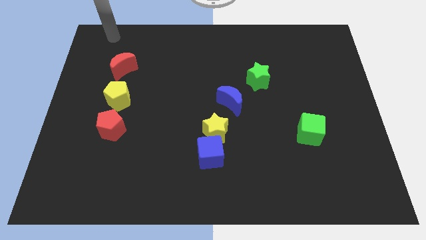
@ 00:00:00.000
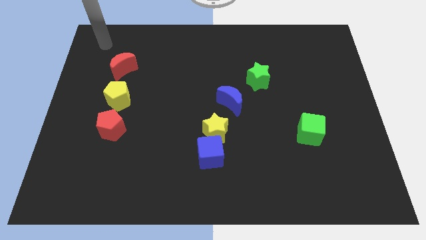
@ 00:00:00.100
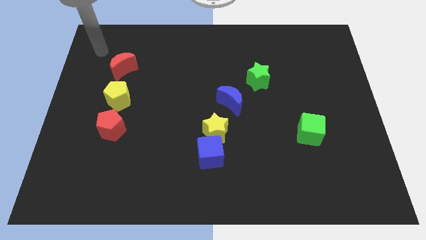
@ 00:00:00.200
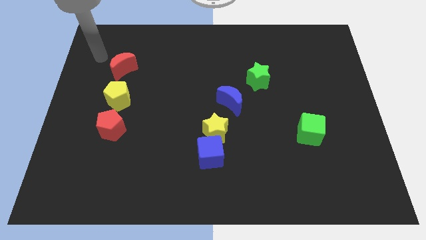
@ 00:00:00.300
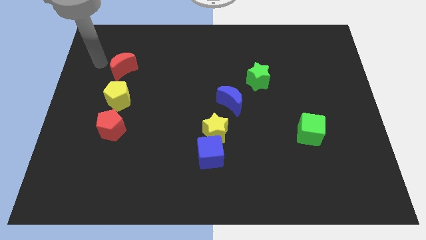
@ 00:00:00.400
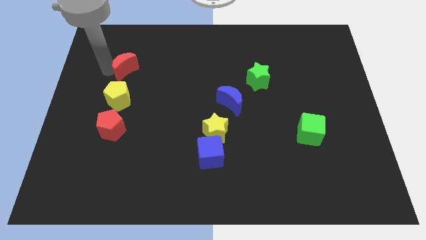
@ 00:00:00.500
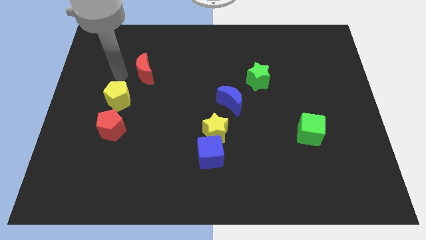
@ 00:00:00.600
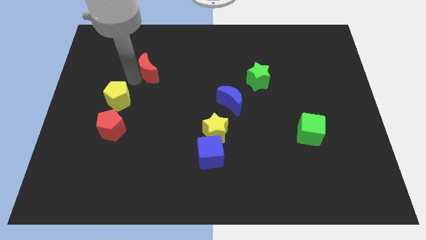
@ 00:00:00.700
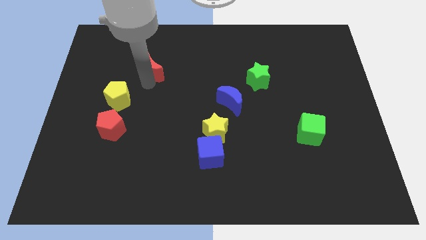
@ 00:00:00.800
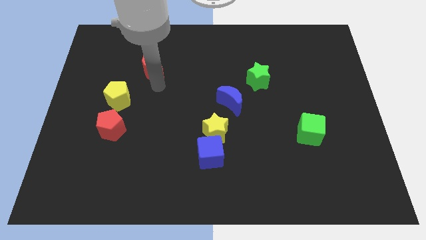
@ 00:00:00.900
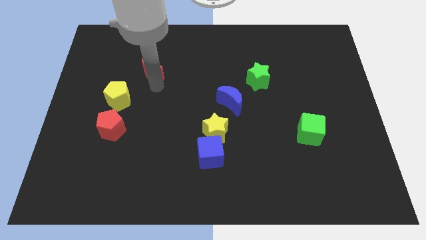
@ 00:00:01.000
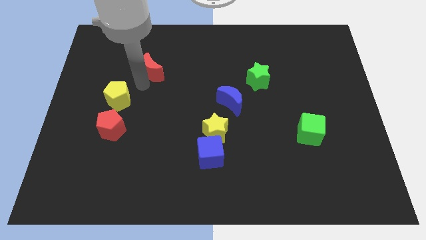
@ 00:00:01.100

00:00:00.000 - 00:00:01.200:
slightly push the red moon parallel left of the green star

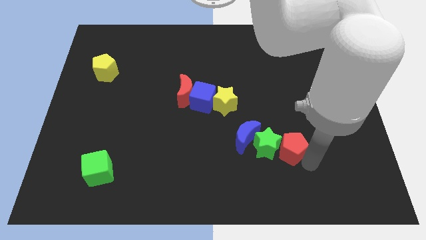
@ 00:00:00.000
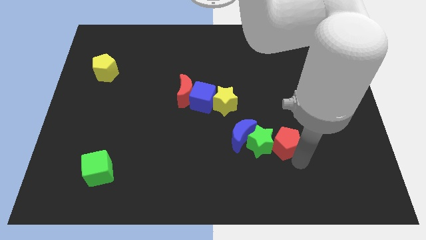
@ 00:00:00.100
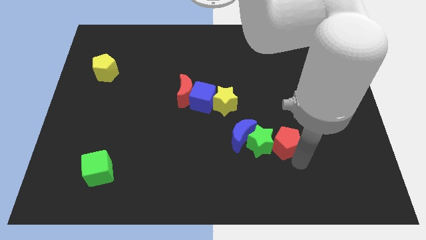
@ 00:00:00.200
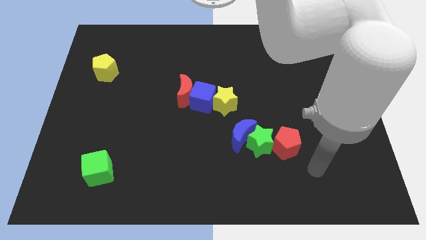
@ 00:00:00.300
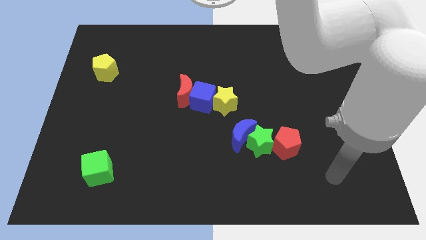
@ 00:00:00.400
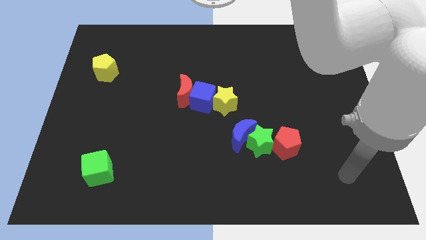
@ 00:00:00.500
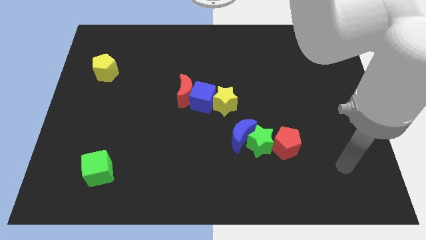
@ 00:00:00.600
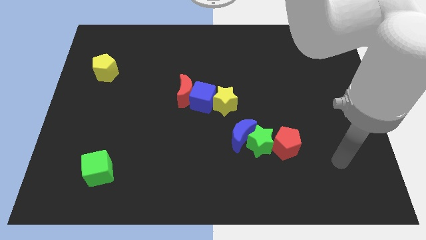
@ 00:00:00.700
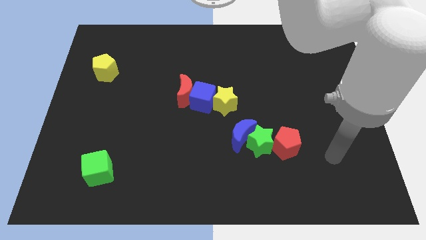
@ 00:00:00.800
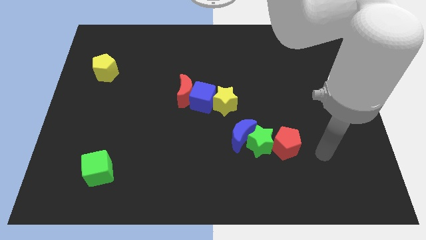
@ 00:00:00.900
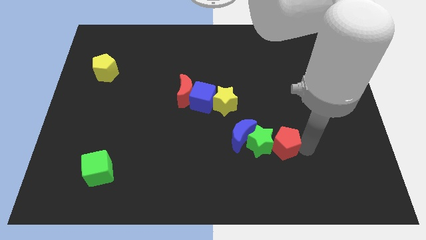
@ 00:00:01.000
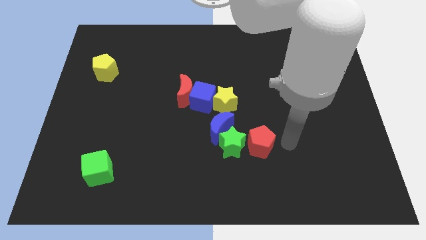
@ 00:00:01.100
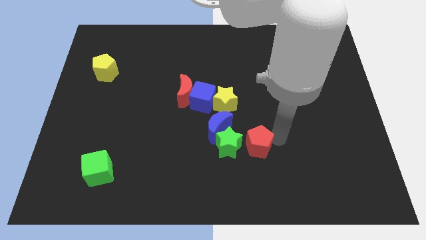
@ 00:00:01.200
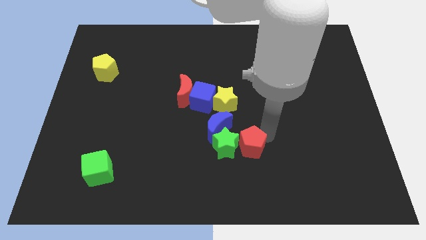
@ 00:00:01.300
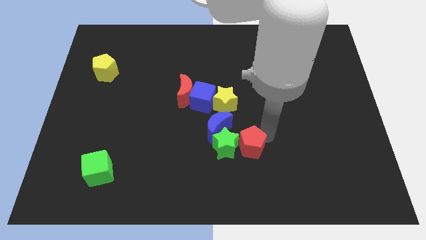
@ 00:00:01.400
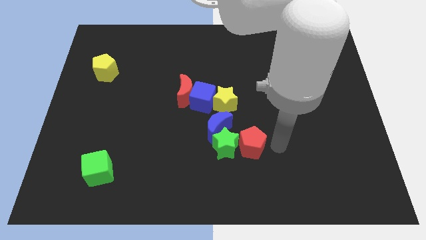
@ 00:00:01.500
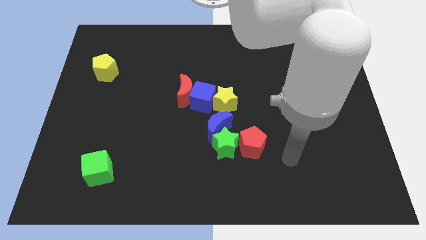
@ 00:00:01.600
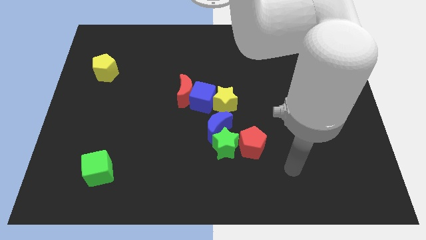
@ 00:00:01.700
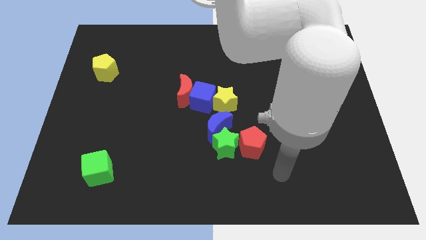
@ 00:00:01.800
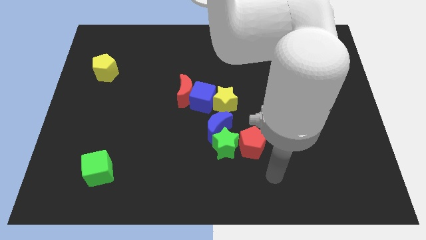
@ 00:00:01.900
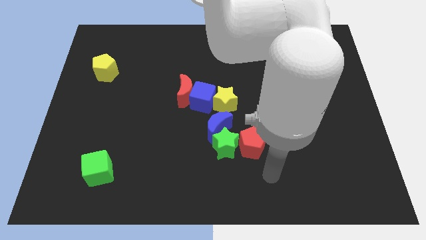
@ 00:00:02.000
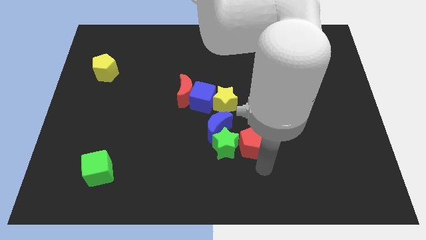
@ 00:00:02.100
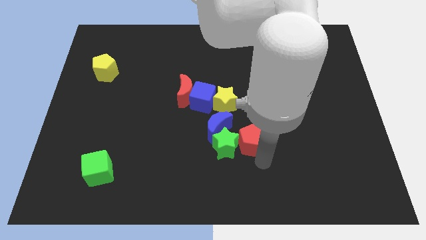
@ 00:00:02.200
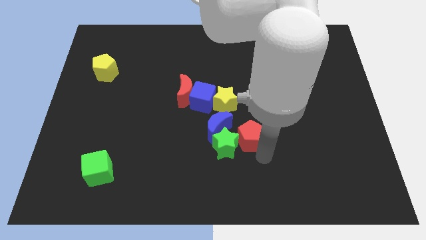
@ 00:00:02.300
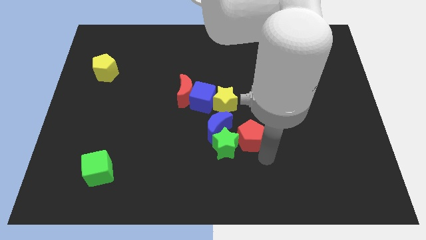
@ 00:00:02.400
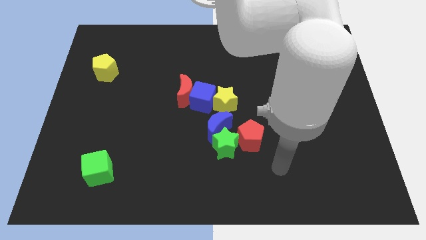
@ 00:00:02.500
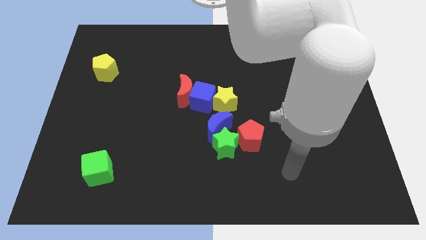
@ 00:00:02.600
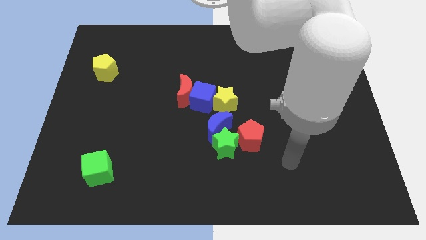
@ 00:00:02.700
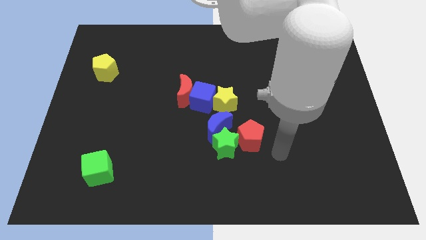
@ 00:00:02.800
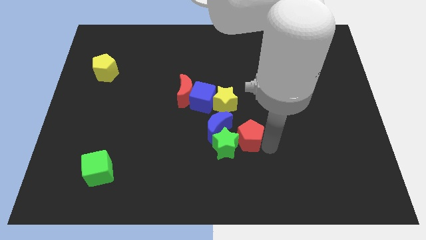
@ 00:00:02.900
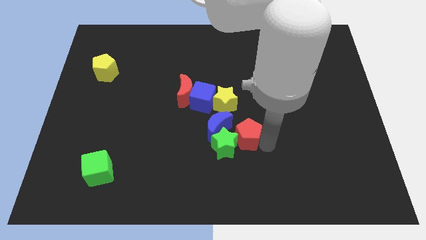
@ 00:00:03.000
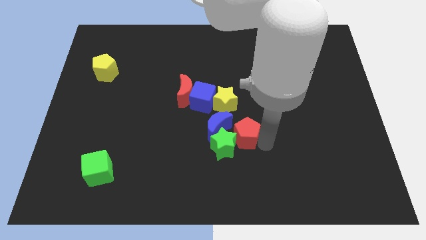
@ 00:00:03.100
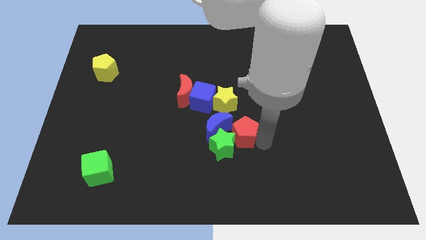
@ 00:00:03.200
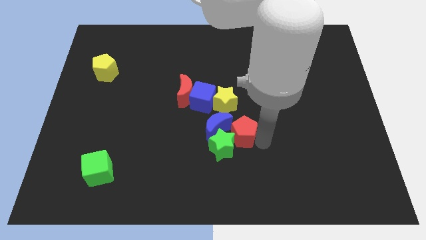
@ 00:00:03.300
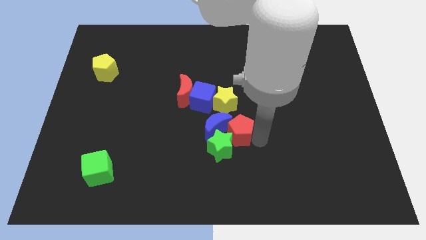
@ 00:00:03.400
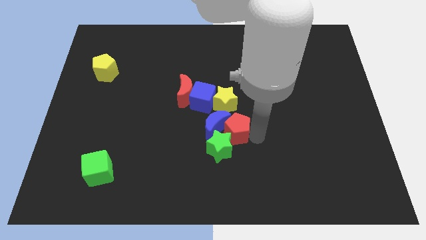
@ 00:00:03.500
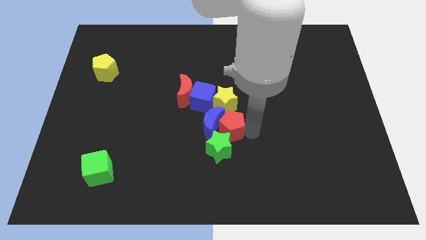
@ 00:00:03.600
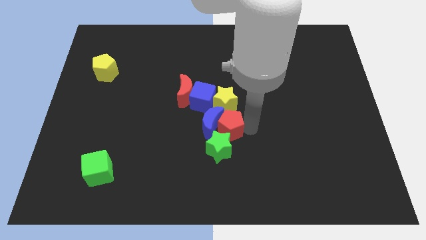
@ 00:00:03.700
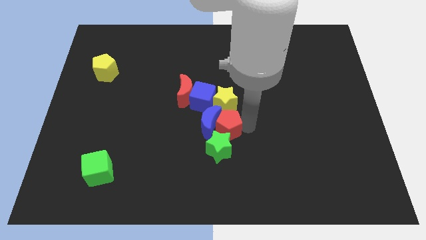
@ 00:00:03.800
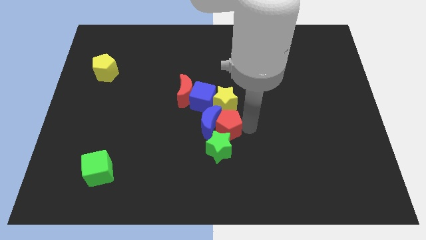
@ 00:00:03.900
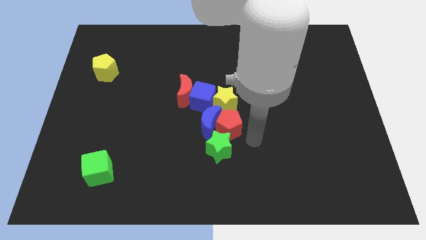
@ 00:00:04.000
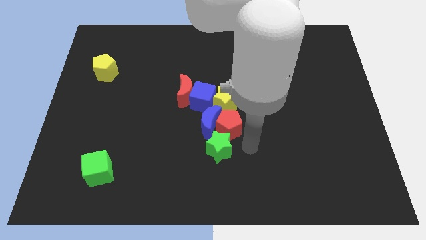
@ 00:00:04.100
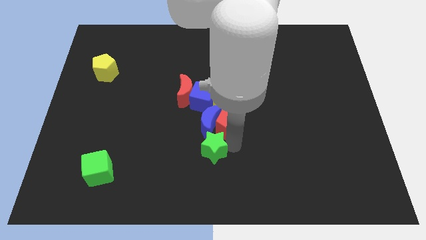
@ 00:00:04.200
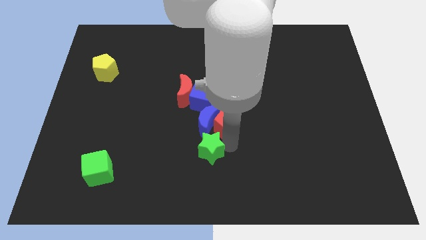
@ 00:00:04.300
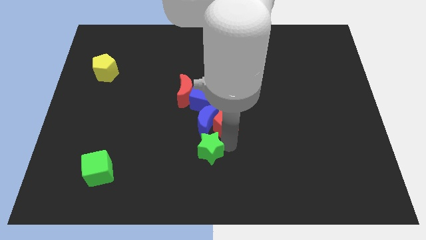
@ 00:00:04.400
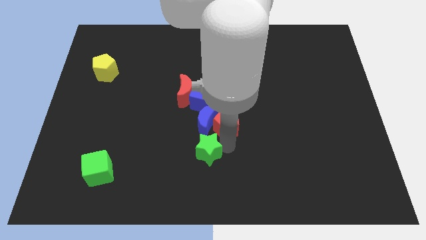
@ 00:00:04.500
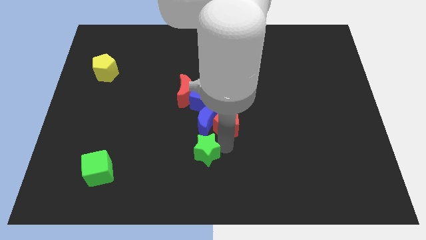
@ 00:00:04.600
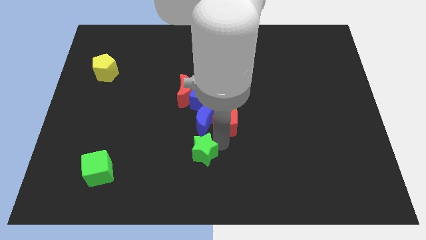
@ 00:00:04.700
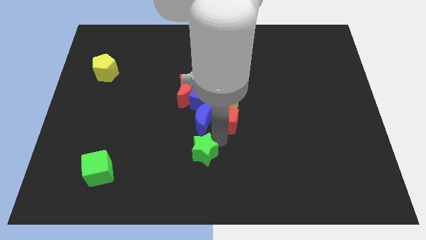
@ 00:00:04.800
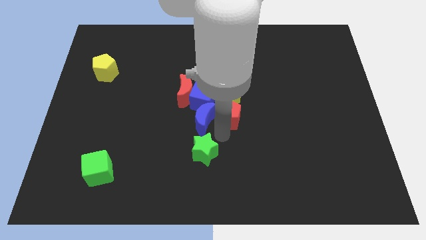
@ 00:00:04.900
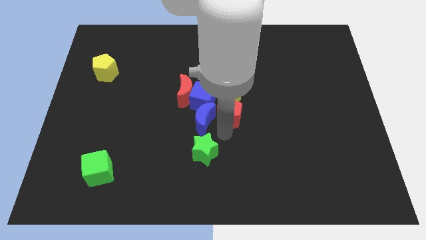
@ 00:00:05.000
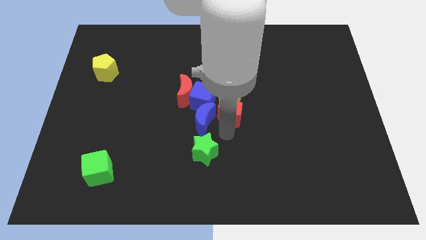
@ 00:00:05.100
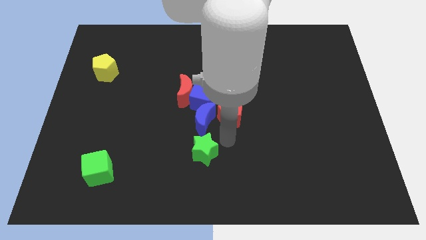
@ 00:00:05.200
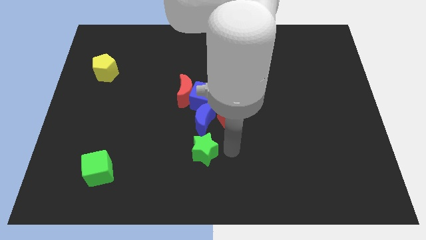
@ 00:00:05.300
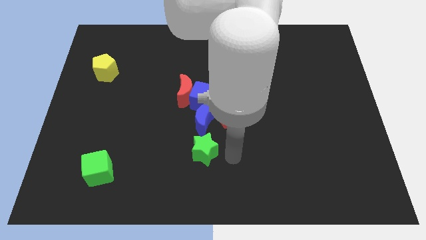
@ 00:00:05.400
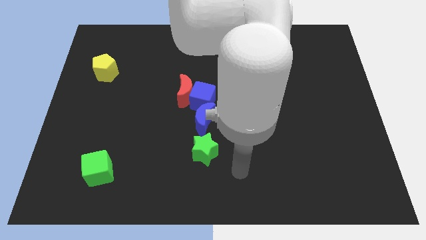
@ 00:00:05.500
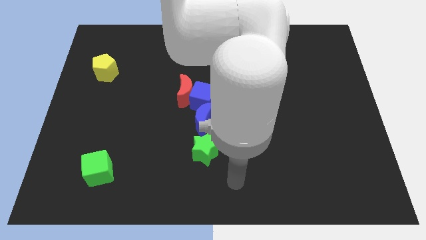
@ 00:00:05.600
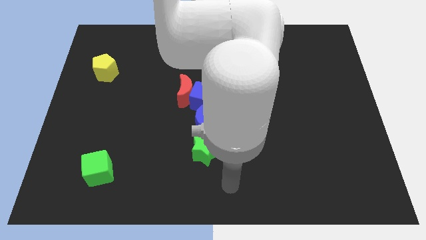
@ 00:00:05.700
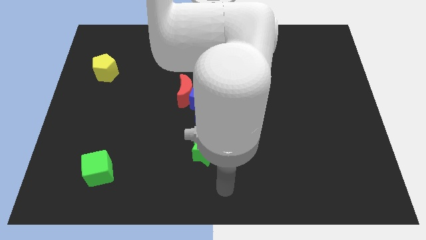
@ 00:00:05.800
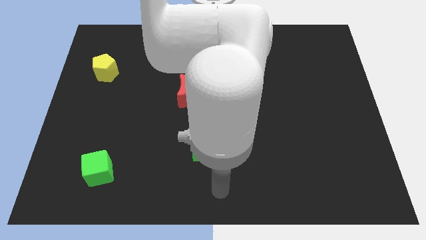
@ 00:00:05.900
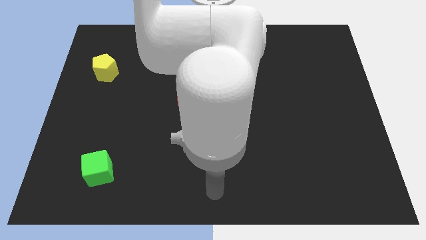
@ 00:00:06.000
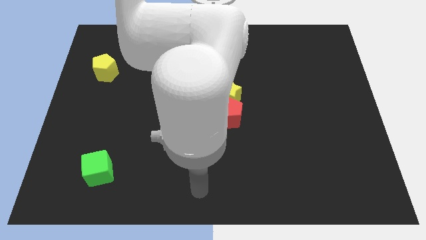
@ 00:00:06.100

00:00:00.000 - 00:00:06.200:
move the blue crescent below the yellow star

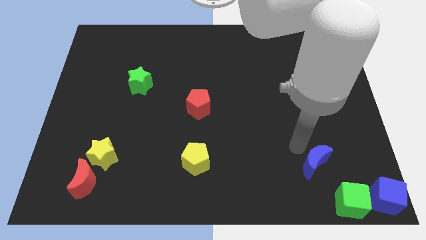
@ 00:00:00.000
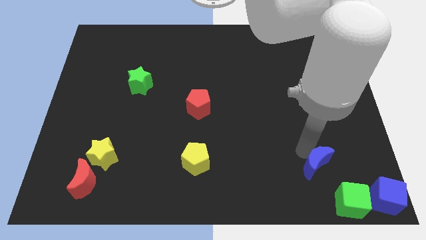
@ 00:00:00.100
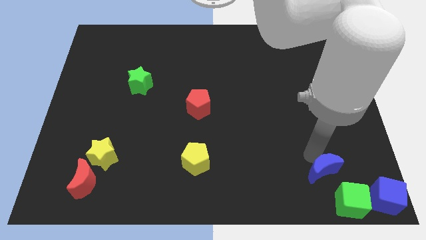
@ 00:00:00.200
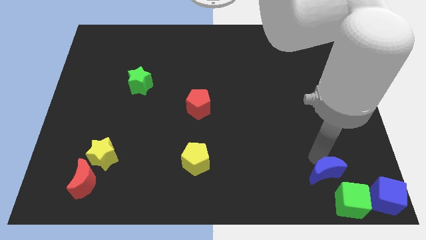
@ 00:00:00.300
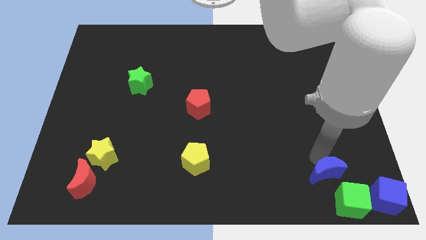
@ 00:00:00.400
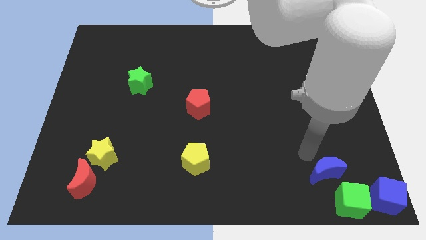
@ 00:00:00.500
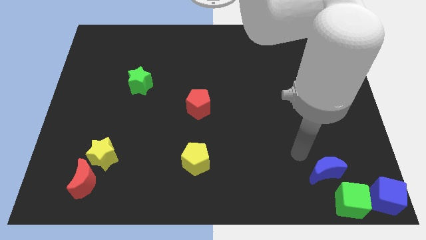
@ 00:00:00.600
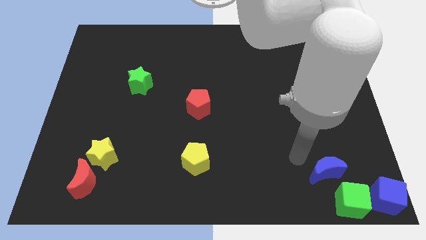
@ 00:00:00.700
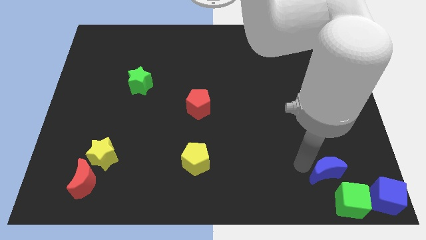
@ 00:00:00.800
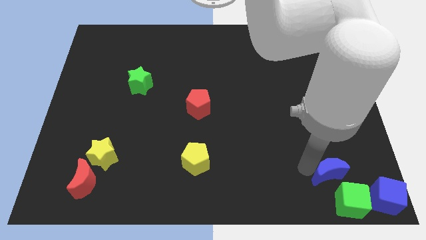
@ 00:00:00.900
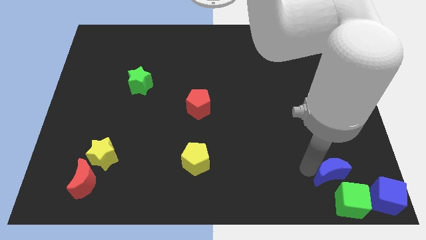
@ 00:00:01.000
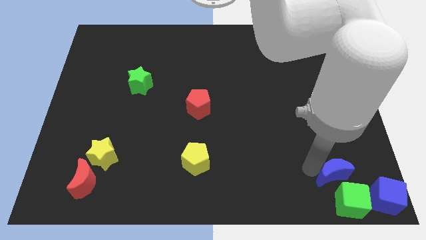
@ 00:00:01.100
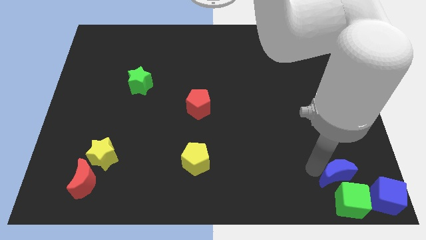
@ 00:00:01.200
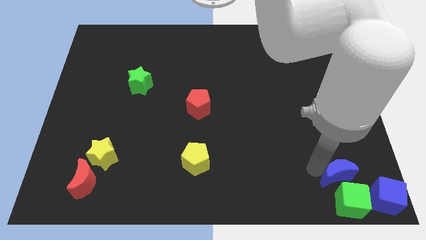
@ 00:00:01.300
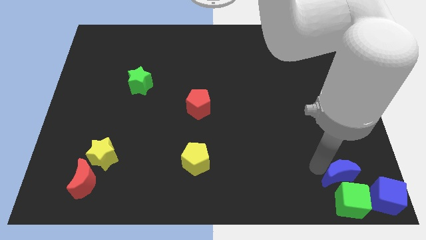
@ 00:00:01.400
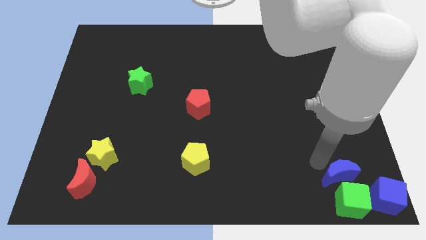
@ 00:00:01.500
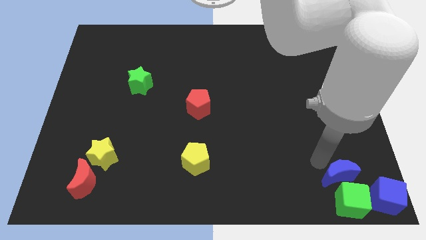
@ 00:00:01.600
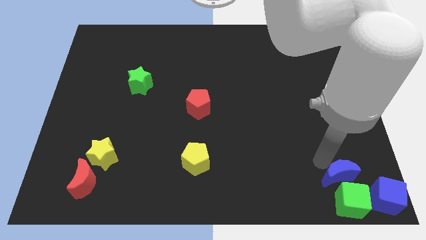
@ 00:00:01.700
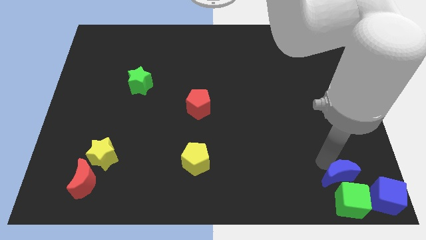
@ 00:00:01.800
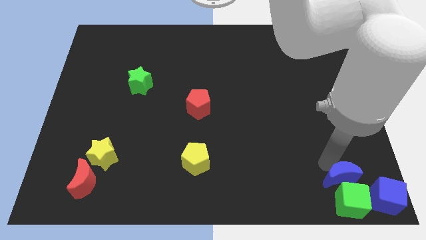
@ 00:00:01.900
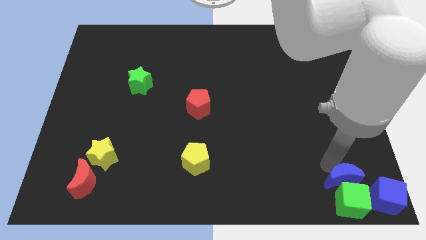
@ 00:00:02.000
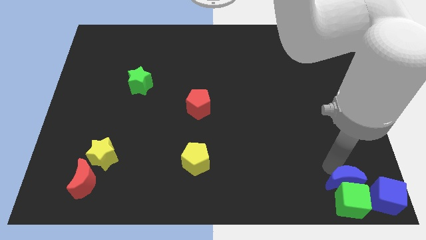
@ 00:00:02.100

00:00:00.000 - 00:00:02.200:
place the blue moon above the green cube
